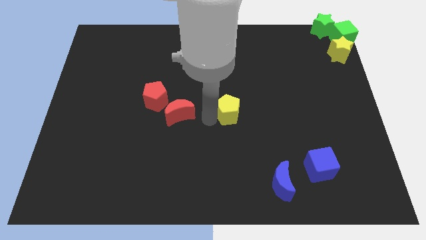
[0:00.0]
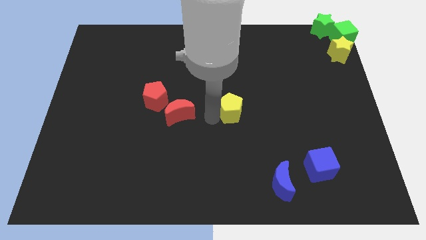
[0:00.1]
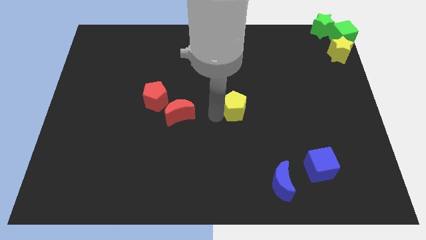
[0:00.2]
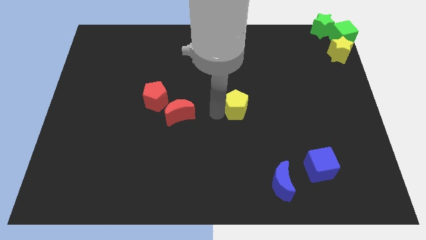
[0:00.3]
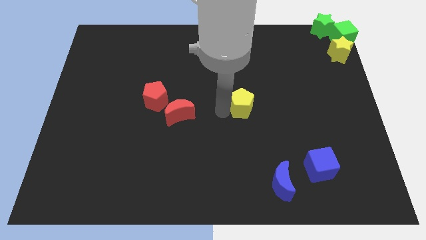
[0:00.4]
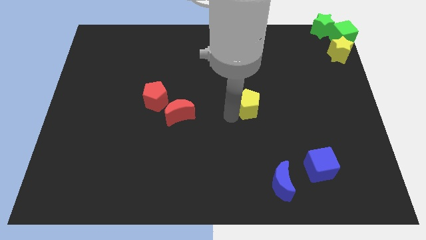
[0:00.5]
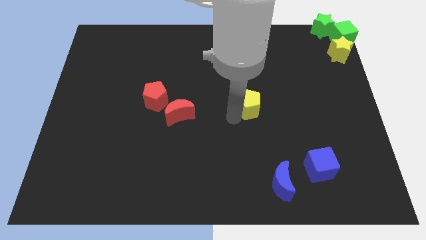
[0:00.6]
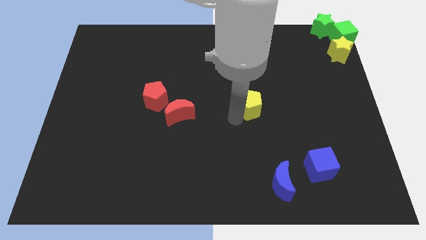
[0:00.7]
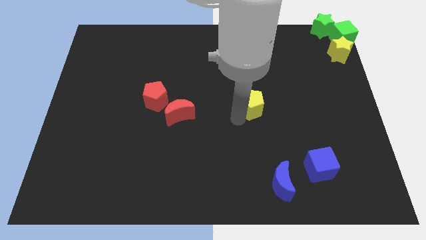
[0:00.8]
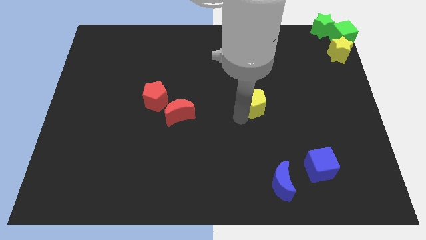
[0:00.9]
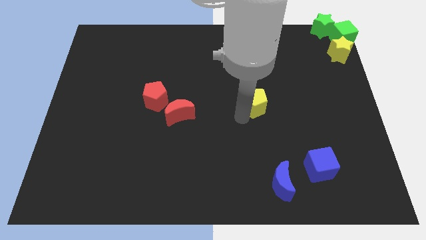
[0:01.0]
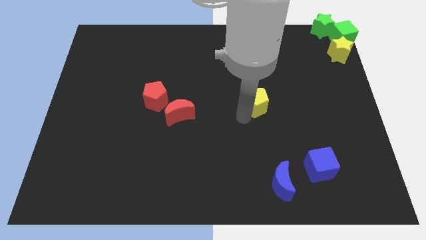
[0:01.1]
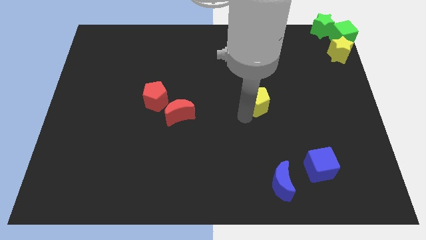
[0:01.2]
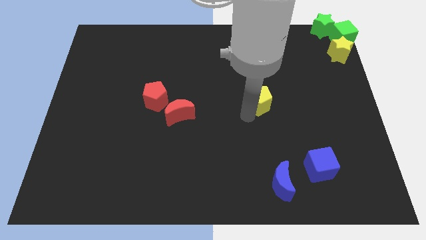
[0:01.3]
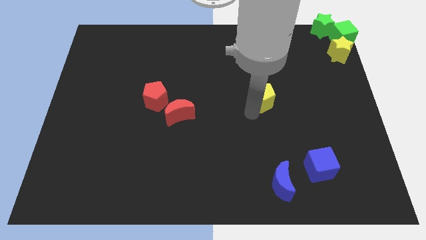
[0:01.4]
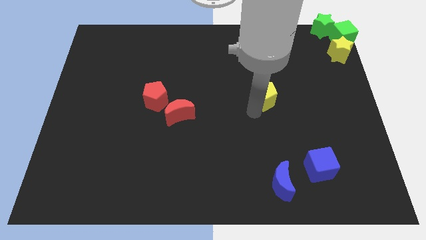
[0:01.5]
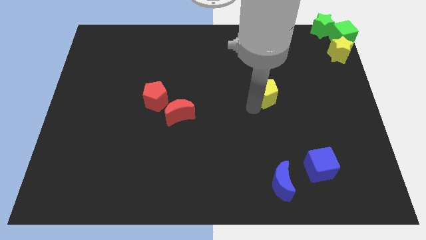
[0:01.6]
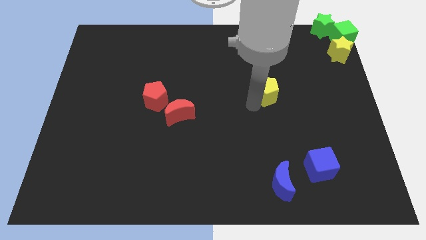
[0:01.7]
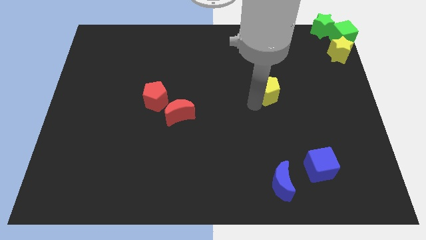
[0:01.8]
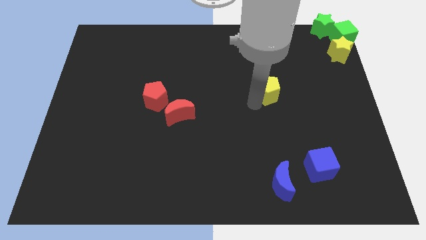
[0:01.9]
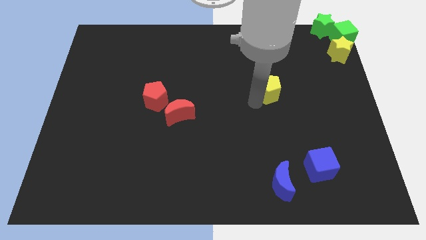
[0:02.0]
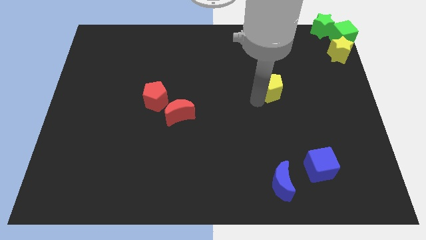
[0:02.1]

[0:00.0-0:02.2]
push the yellow pentagon to the top right of the board

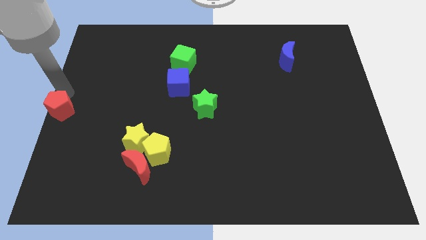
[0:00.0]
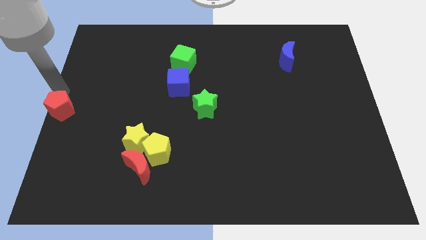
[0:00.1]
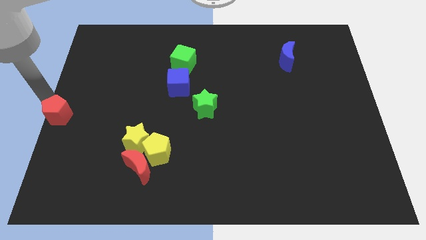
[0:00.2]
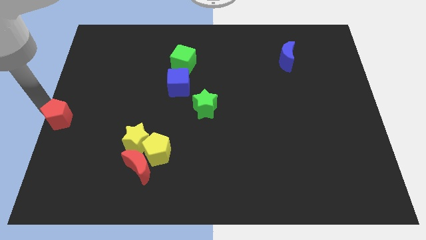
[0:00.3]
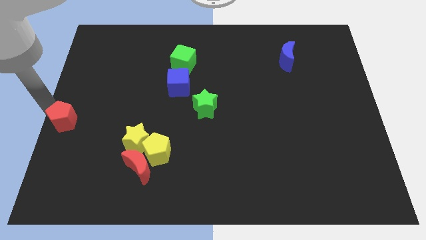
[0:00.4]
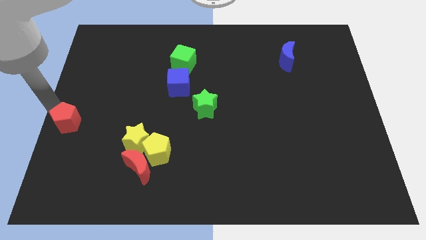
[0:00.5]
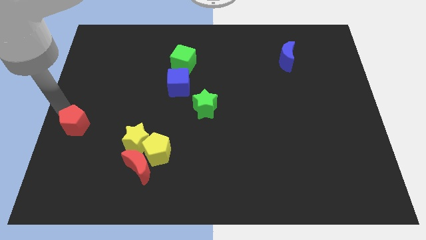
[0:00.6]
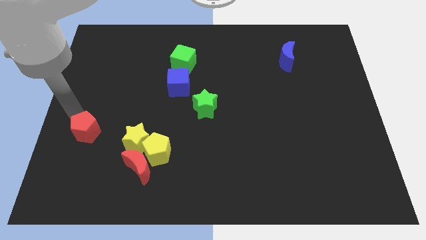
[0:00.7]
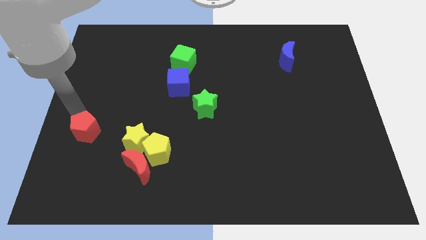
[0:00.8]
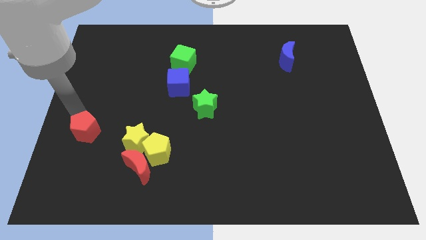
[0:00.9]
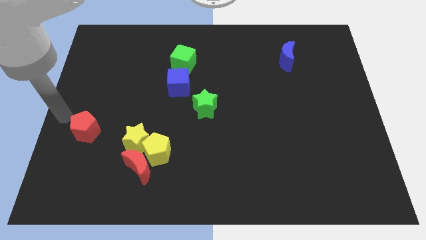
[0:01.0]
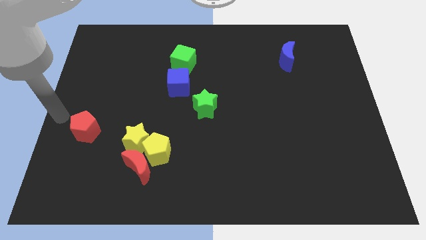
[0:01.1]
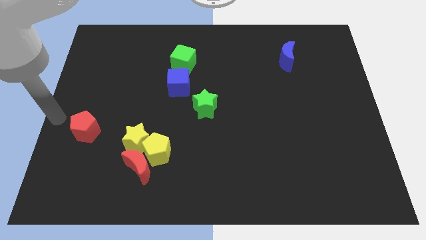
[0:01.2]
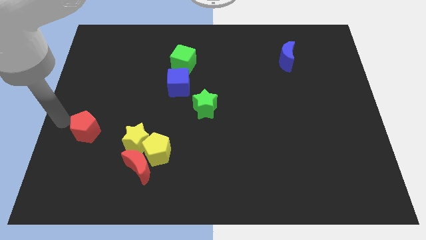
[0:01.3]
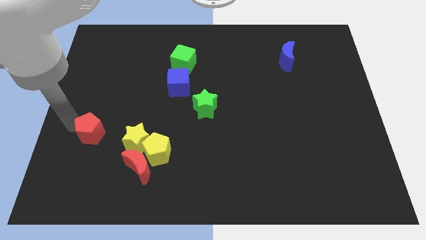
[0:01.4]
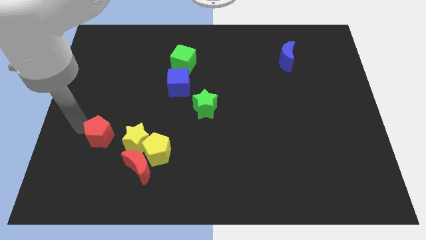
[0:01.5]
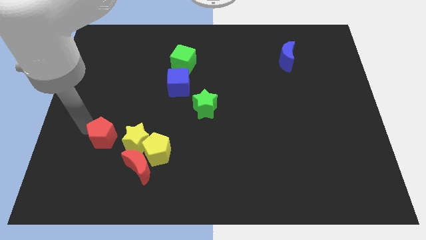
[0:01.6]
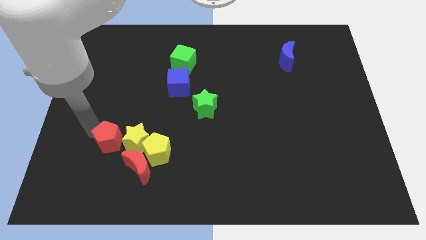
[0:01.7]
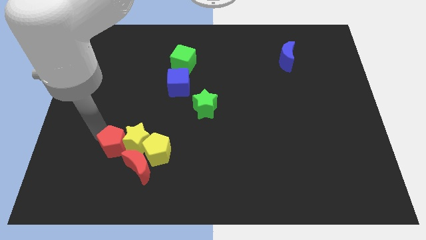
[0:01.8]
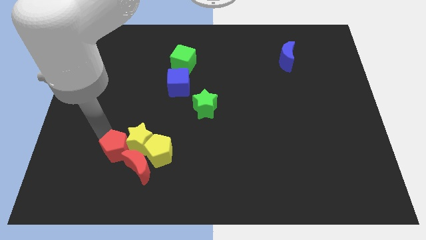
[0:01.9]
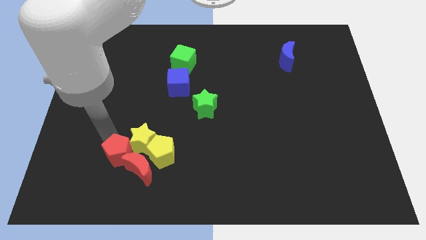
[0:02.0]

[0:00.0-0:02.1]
move the red pentagon into the red moon

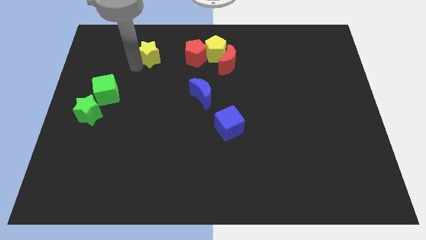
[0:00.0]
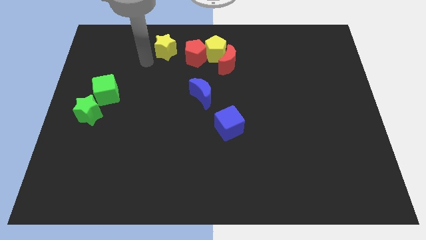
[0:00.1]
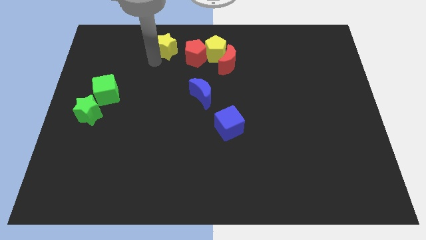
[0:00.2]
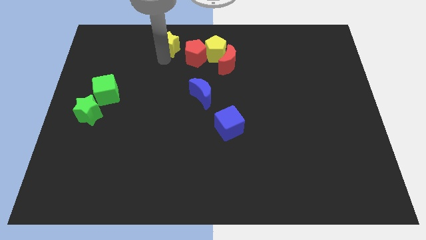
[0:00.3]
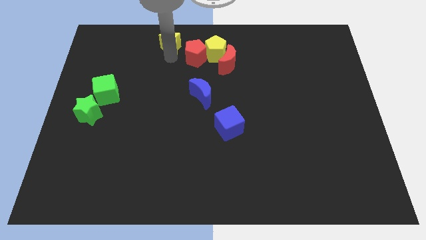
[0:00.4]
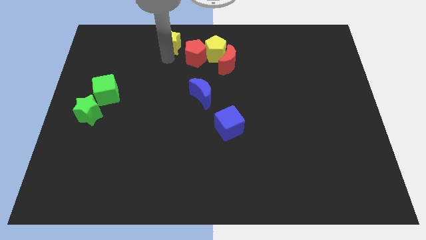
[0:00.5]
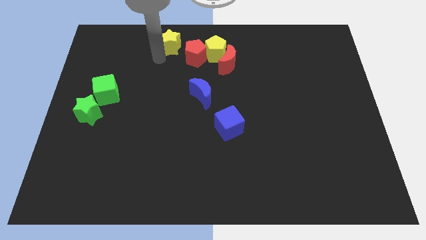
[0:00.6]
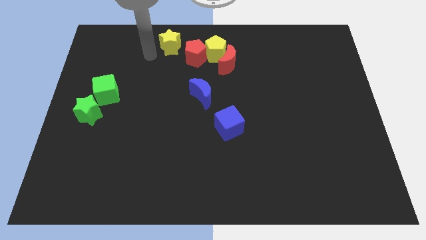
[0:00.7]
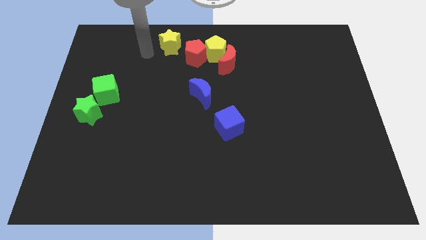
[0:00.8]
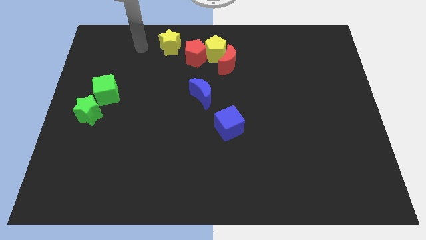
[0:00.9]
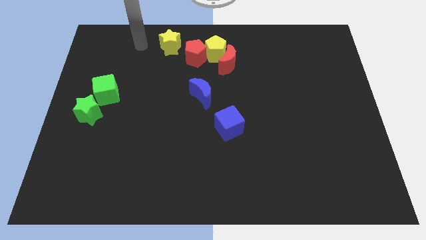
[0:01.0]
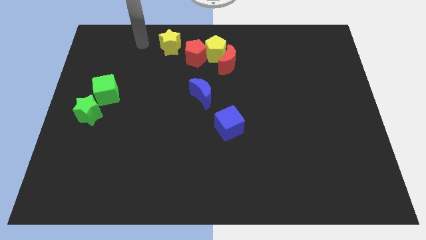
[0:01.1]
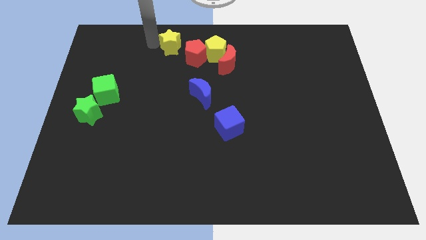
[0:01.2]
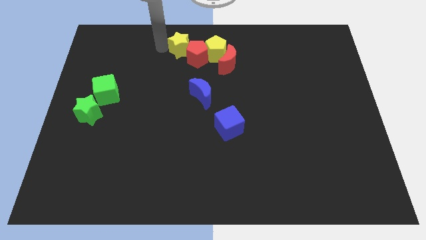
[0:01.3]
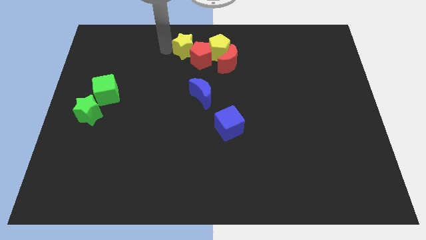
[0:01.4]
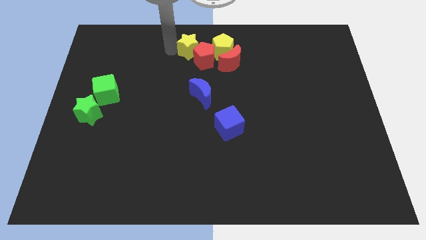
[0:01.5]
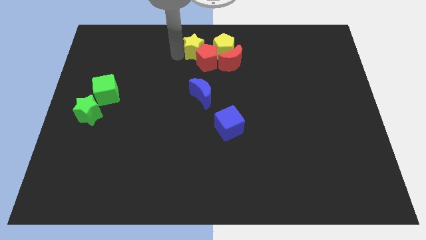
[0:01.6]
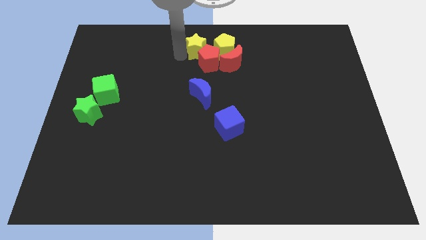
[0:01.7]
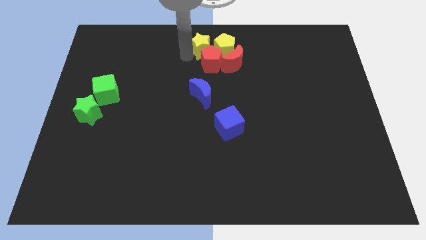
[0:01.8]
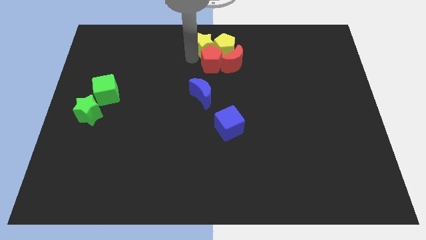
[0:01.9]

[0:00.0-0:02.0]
push the yellow star to the left side of the yellow pentagon on the board

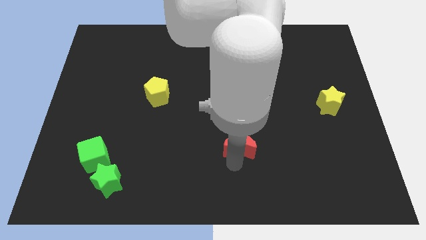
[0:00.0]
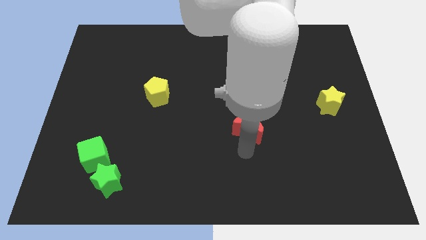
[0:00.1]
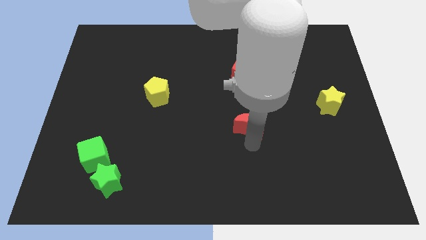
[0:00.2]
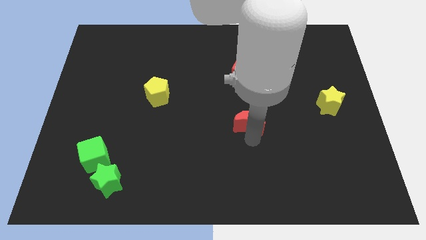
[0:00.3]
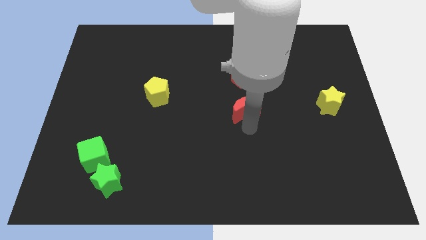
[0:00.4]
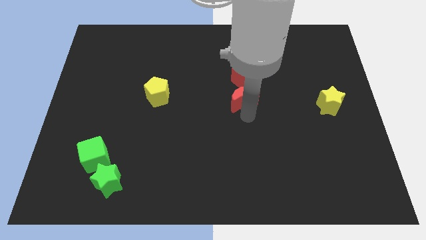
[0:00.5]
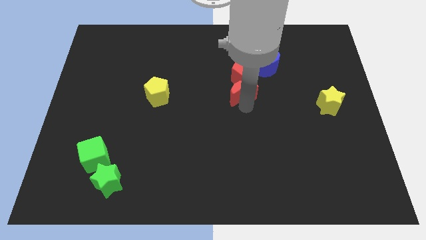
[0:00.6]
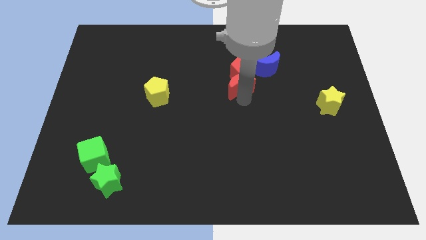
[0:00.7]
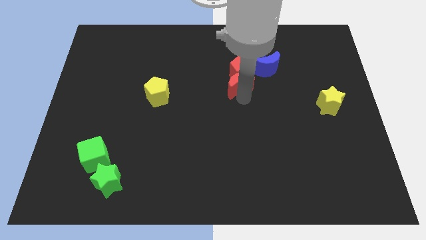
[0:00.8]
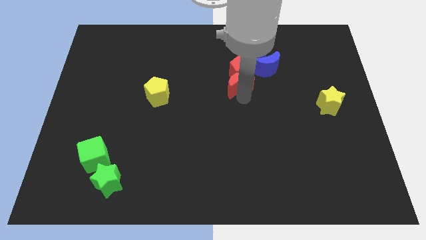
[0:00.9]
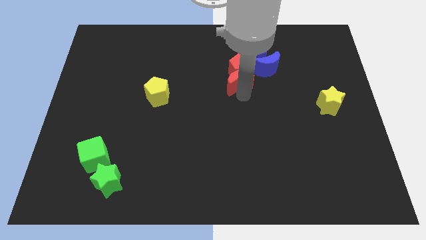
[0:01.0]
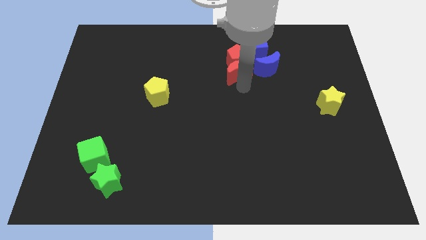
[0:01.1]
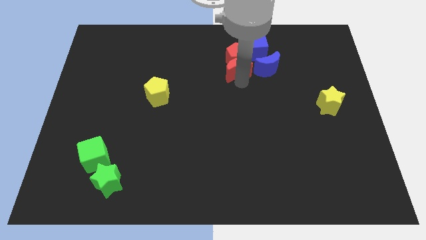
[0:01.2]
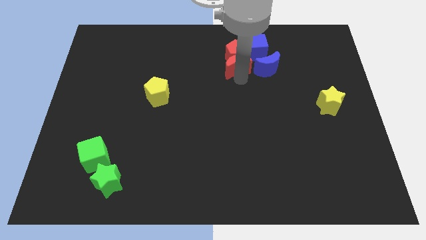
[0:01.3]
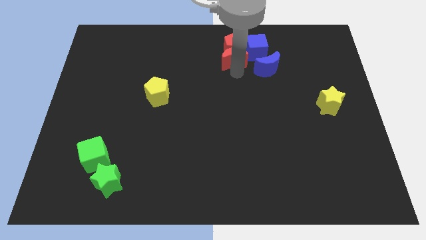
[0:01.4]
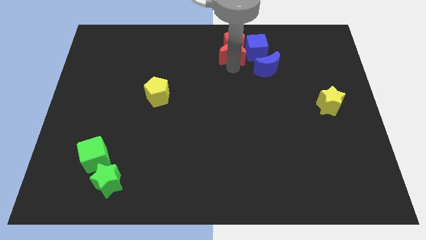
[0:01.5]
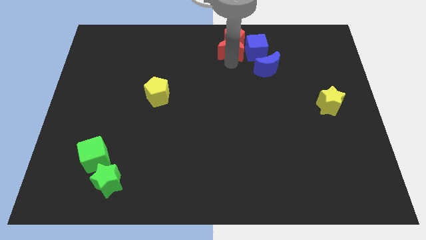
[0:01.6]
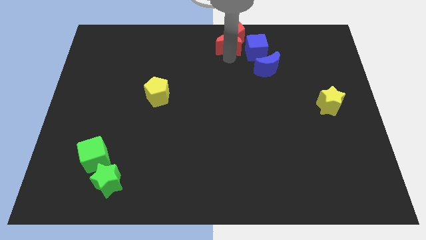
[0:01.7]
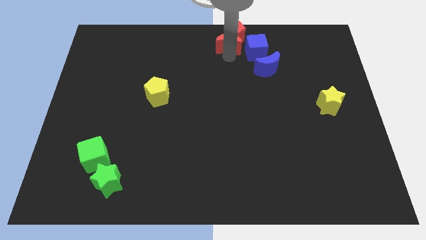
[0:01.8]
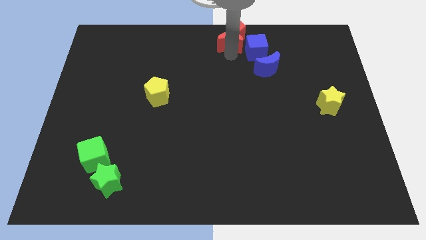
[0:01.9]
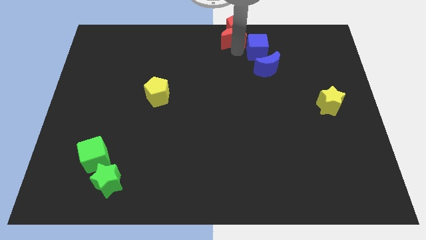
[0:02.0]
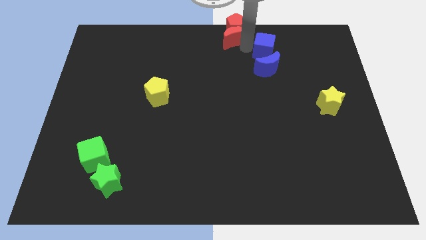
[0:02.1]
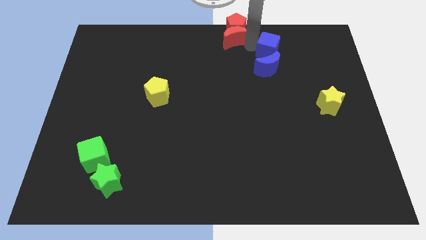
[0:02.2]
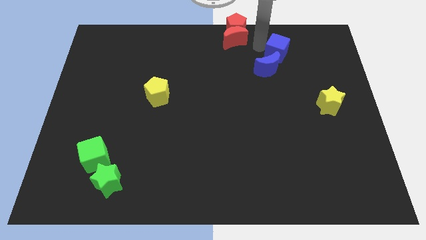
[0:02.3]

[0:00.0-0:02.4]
push the red blocks to the top center

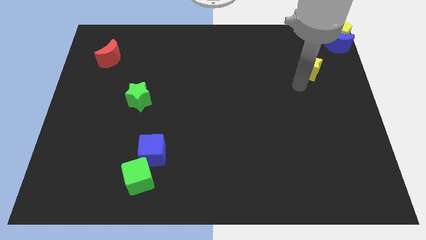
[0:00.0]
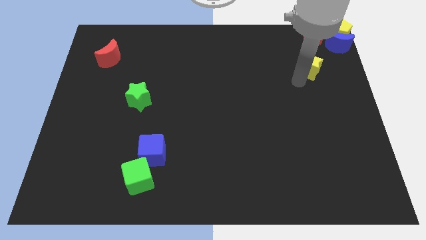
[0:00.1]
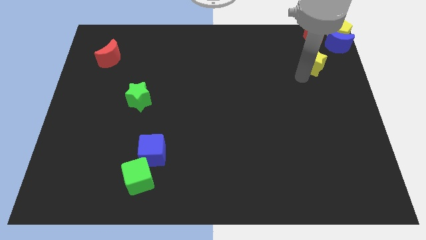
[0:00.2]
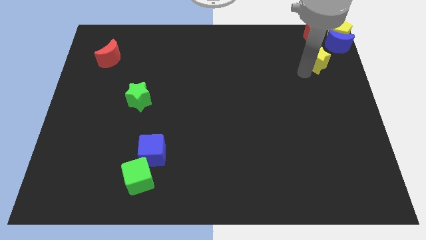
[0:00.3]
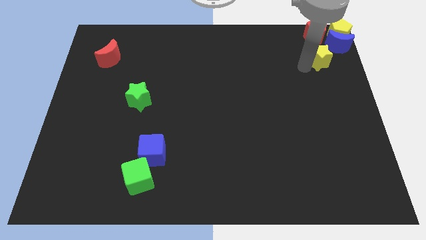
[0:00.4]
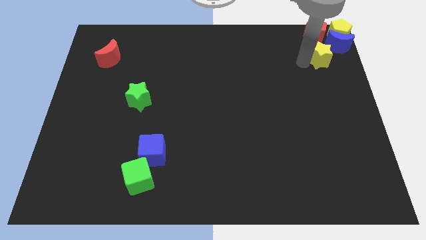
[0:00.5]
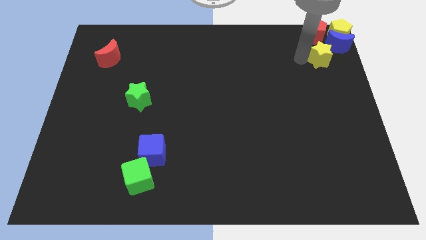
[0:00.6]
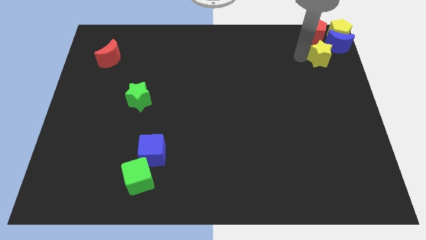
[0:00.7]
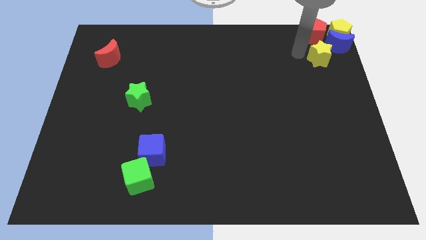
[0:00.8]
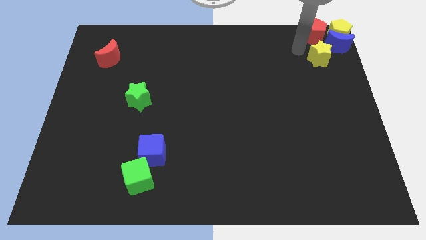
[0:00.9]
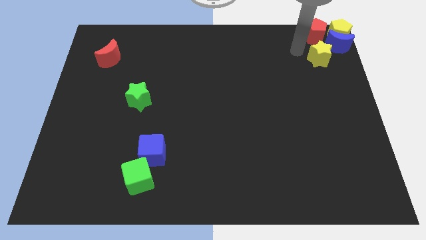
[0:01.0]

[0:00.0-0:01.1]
move the yellow star to the group of blocks
